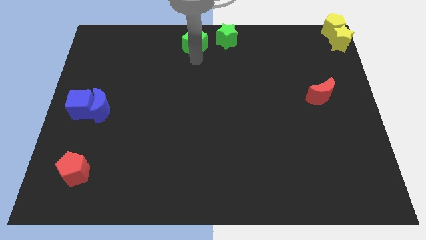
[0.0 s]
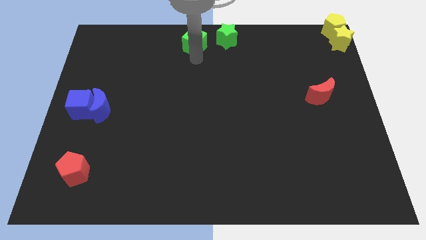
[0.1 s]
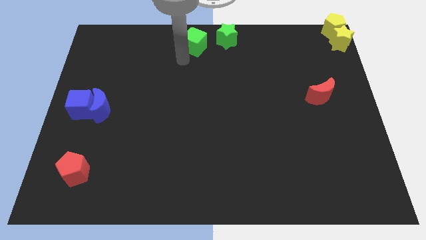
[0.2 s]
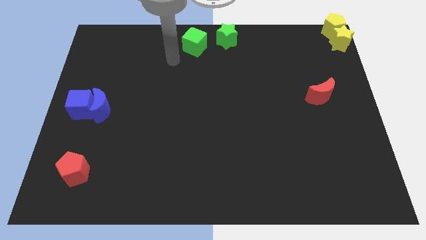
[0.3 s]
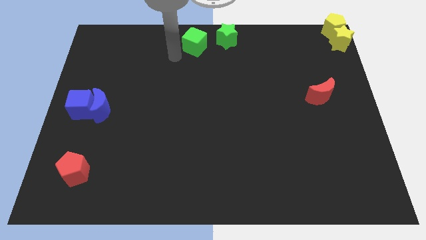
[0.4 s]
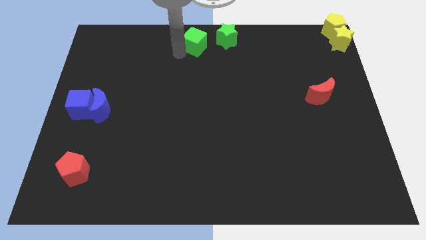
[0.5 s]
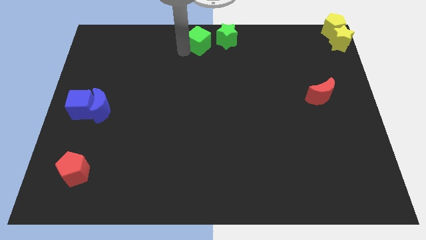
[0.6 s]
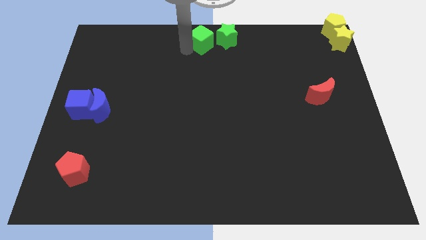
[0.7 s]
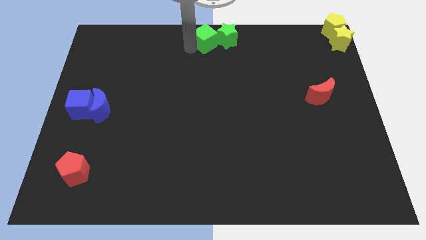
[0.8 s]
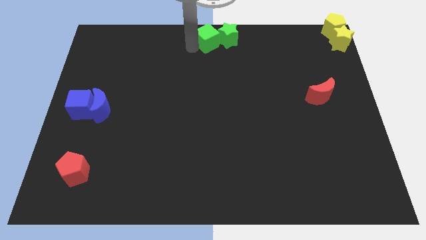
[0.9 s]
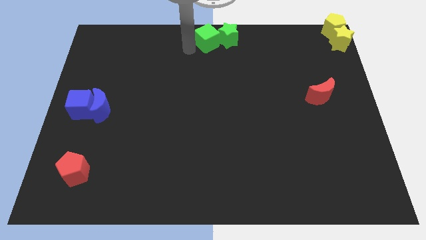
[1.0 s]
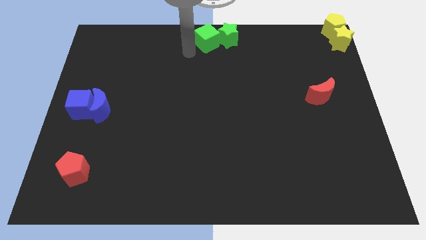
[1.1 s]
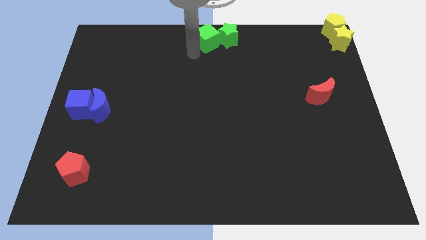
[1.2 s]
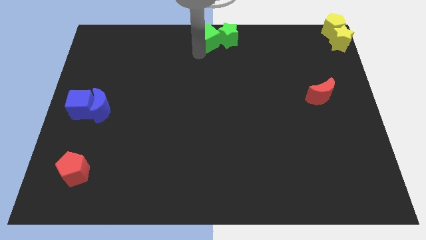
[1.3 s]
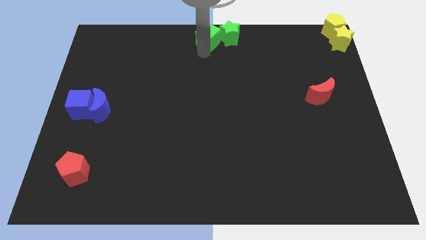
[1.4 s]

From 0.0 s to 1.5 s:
push the green cube into the green star

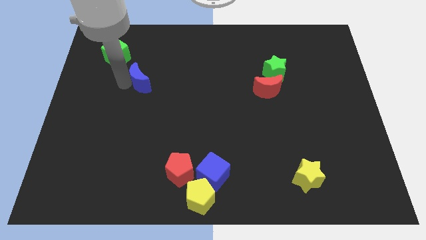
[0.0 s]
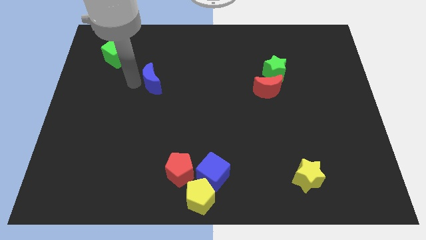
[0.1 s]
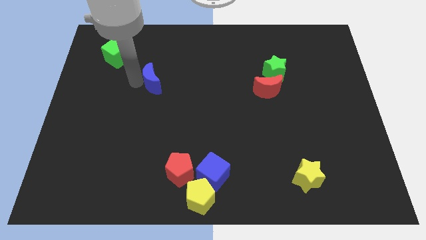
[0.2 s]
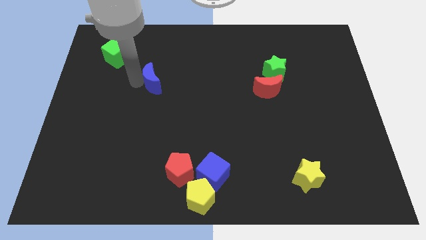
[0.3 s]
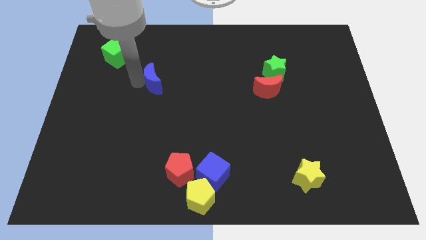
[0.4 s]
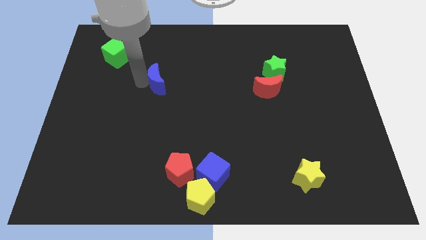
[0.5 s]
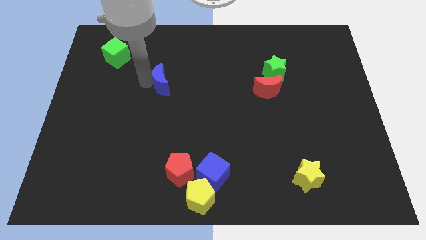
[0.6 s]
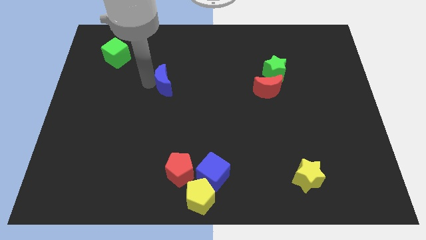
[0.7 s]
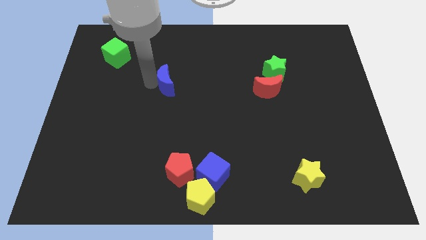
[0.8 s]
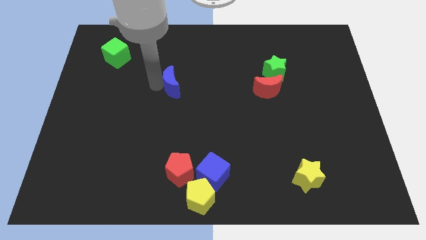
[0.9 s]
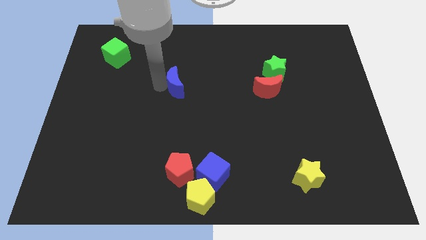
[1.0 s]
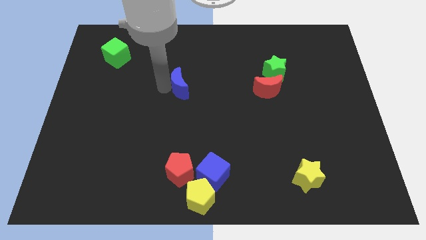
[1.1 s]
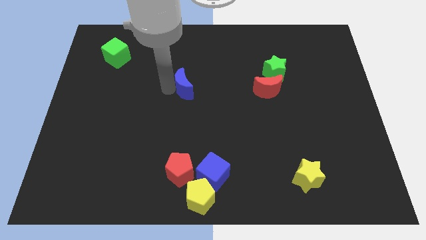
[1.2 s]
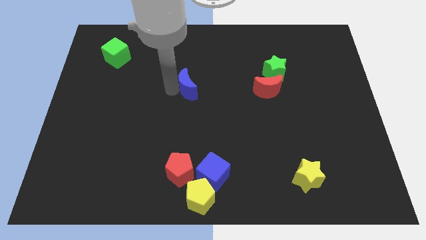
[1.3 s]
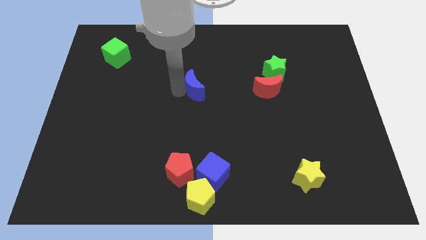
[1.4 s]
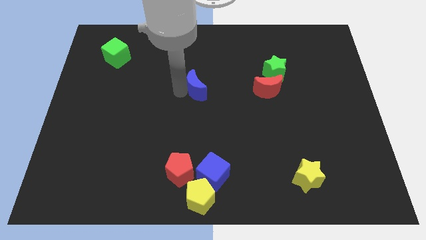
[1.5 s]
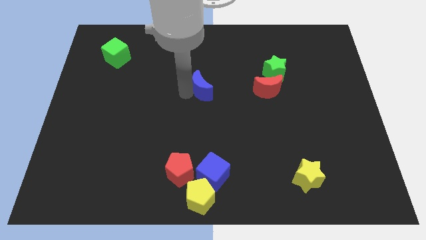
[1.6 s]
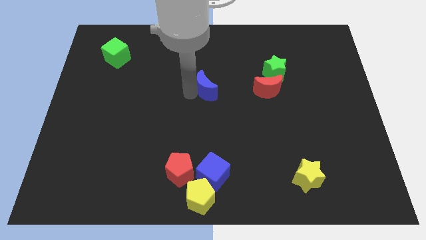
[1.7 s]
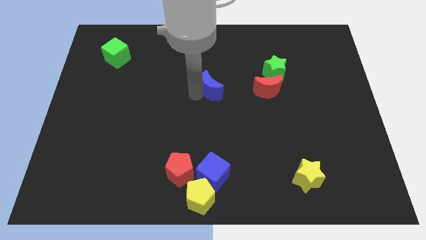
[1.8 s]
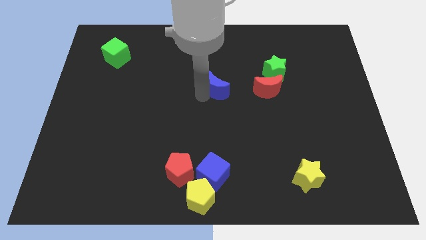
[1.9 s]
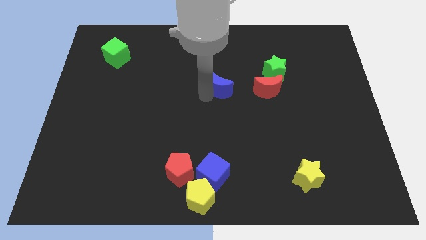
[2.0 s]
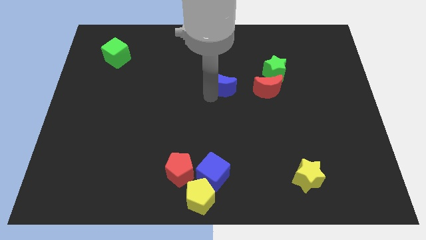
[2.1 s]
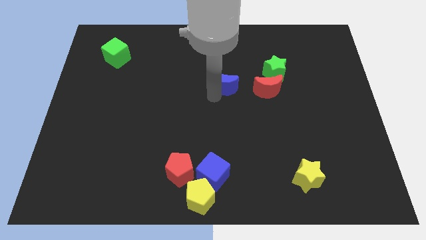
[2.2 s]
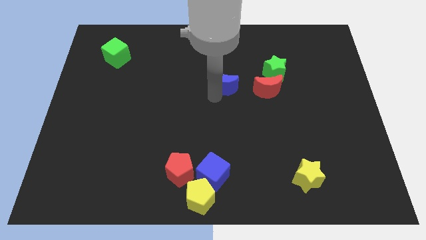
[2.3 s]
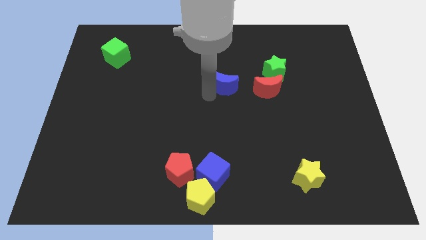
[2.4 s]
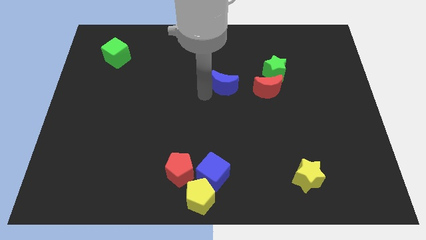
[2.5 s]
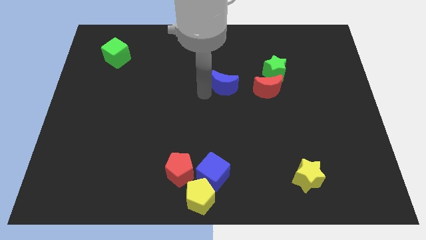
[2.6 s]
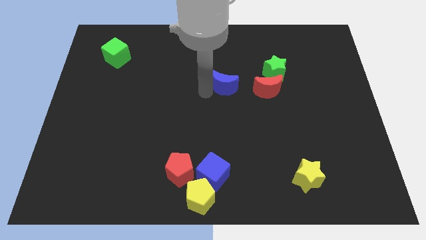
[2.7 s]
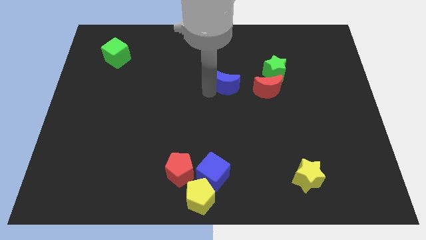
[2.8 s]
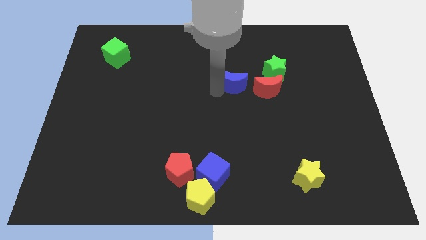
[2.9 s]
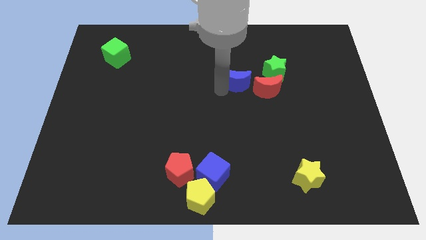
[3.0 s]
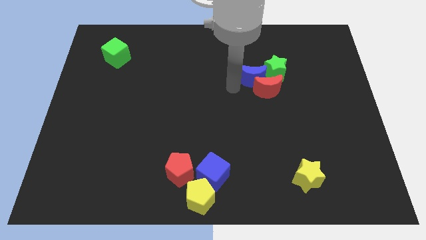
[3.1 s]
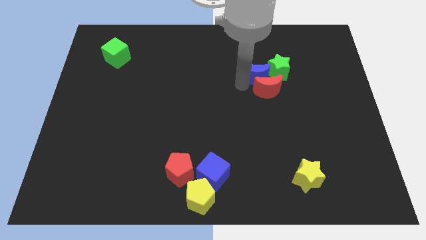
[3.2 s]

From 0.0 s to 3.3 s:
push the blue crescent into the green star

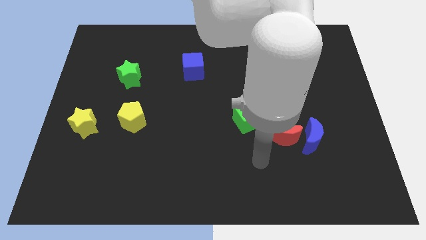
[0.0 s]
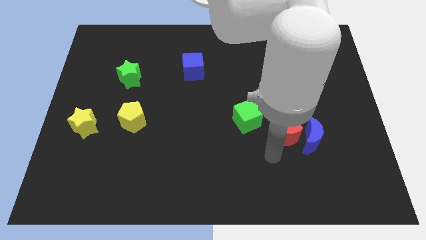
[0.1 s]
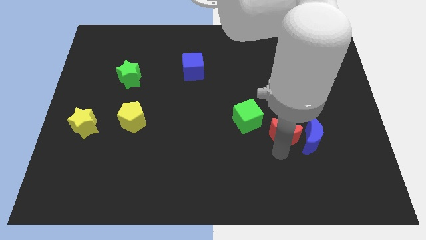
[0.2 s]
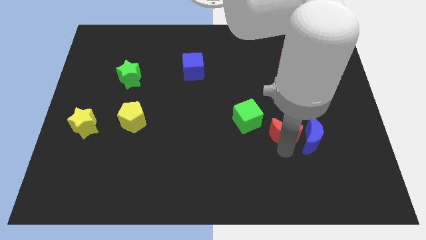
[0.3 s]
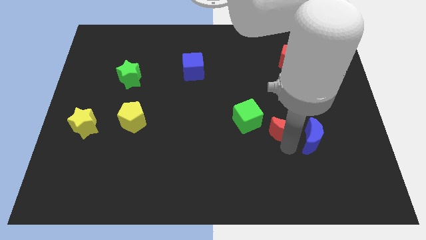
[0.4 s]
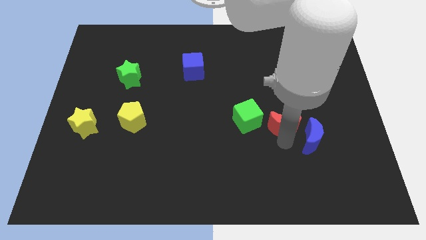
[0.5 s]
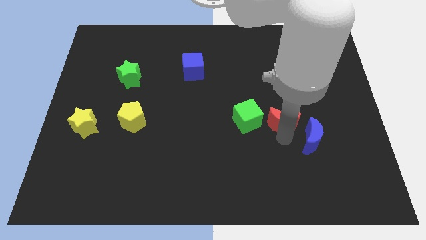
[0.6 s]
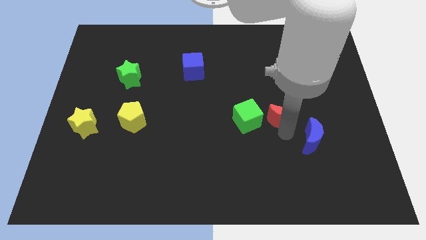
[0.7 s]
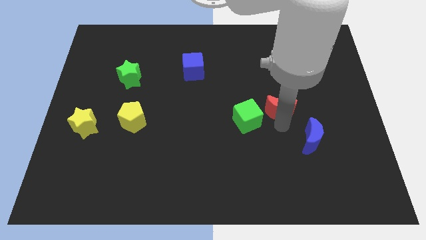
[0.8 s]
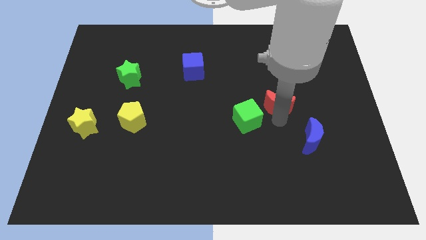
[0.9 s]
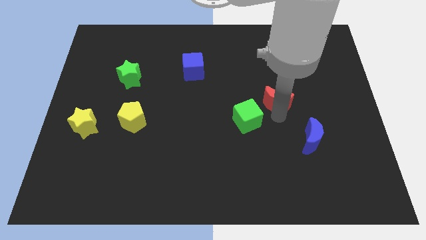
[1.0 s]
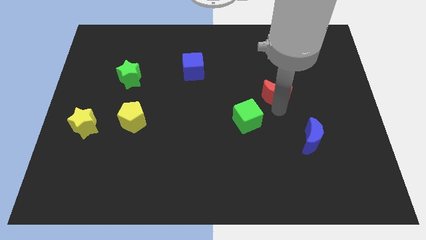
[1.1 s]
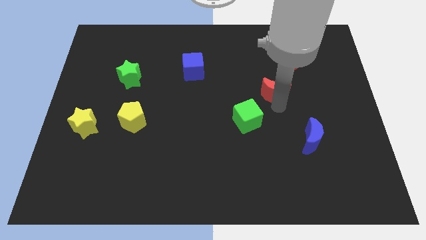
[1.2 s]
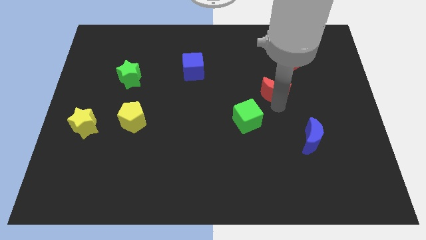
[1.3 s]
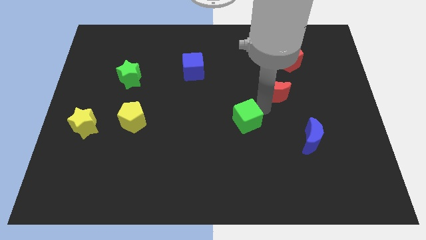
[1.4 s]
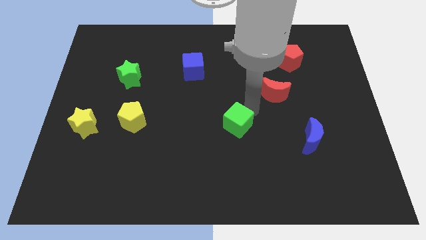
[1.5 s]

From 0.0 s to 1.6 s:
place the red moon diagonally to the green cube

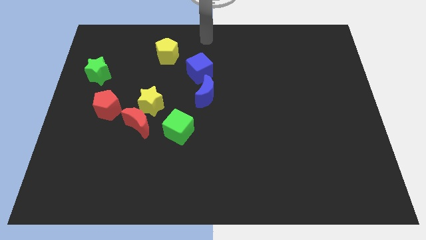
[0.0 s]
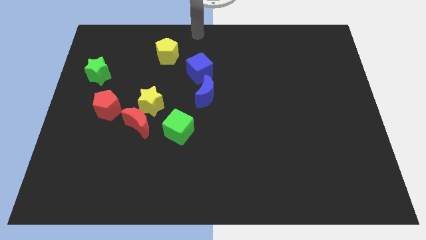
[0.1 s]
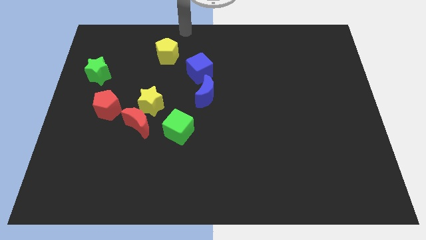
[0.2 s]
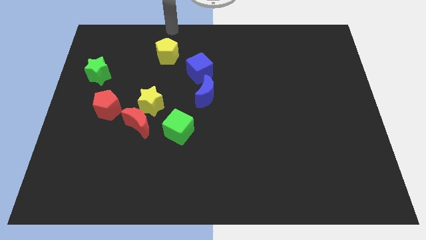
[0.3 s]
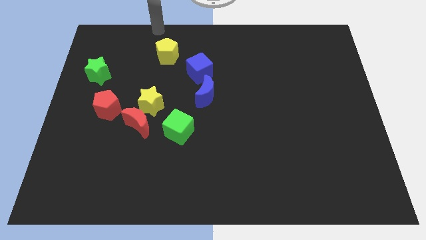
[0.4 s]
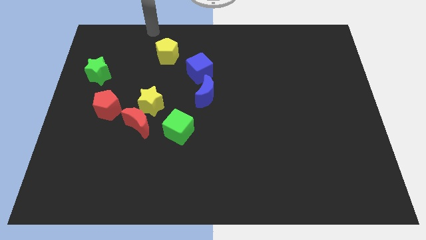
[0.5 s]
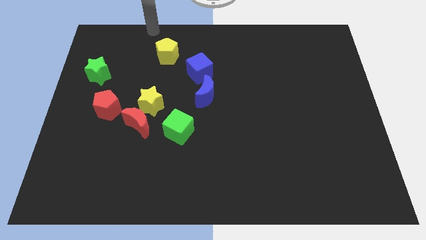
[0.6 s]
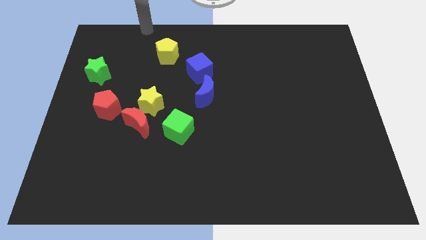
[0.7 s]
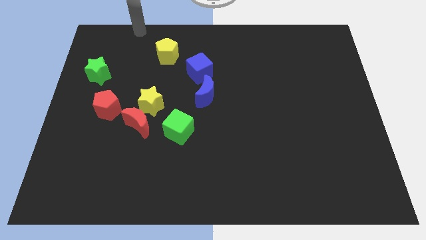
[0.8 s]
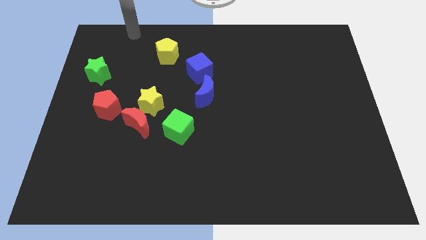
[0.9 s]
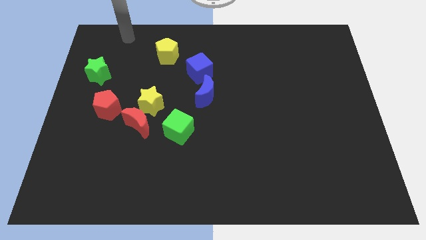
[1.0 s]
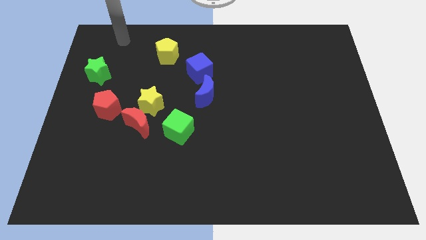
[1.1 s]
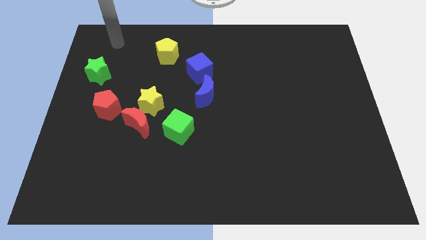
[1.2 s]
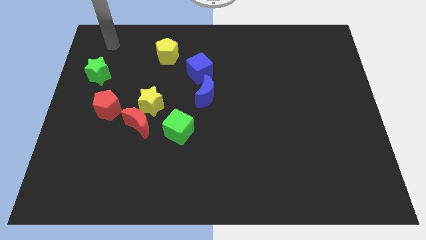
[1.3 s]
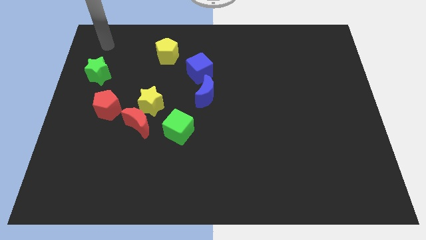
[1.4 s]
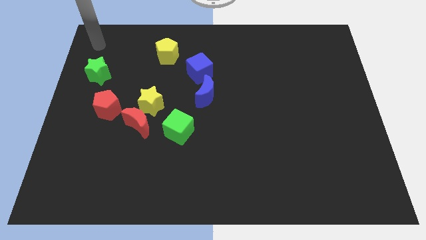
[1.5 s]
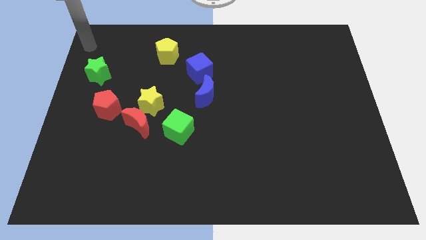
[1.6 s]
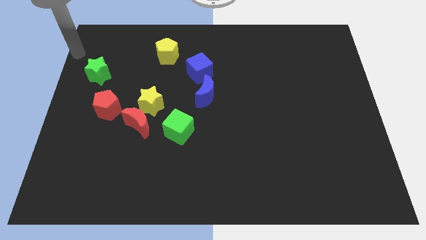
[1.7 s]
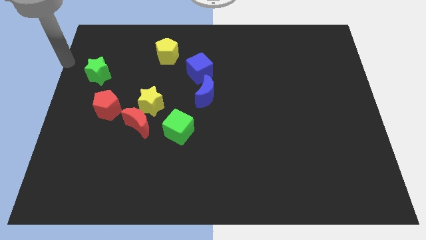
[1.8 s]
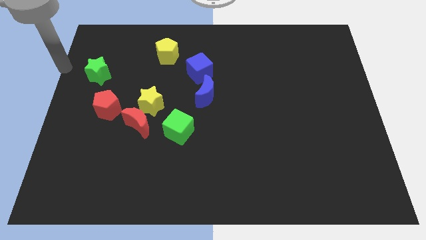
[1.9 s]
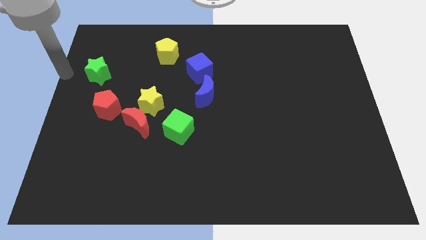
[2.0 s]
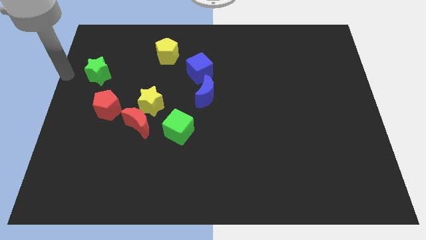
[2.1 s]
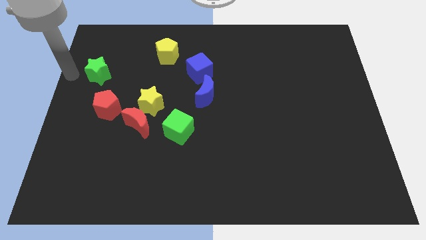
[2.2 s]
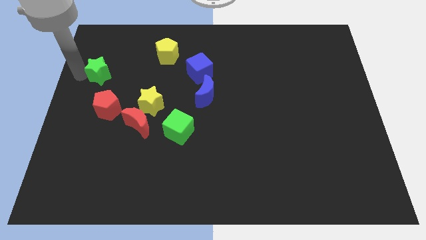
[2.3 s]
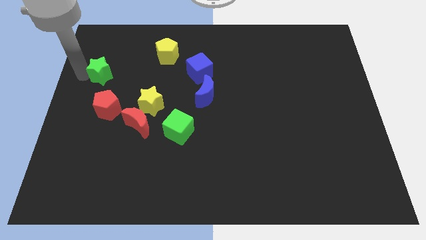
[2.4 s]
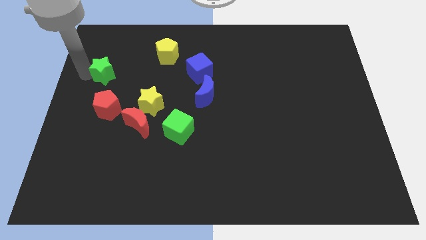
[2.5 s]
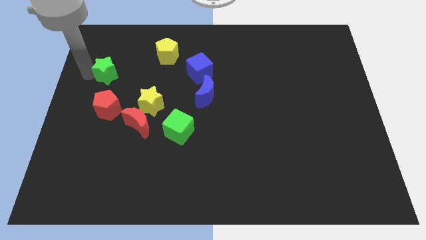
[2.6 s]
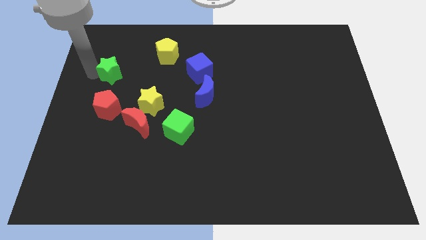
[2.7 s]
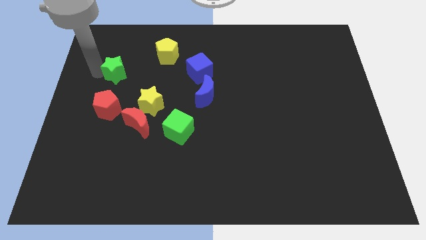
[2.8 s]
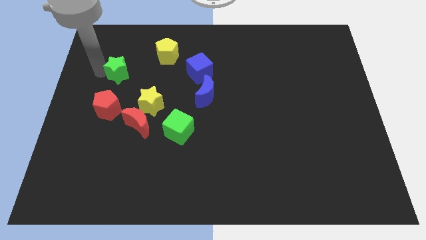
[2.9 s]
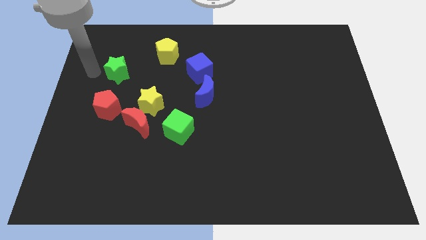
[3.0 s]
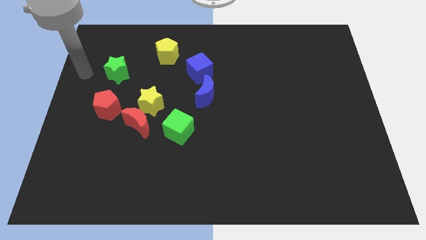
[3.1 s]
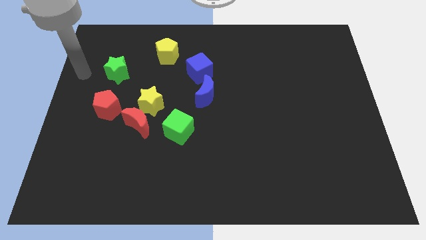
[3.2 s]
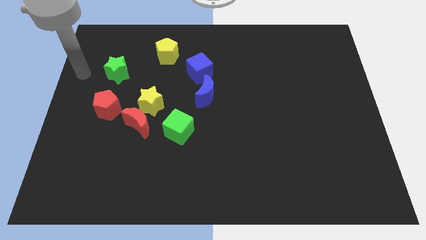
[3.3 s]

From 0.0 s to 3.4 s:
push green star above red pentagon
